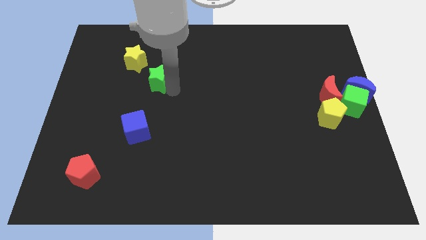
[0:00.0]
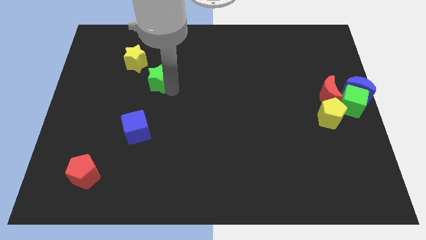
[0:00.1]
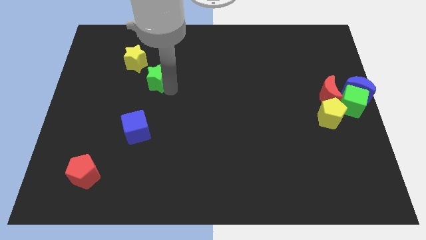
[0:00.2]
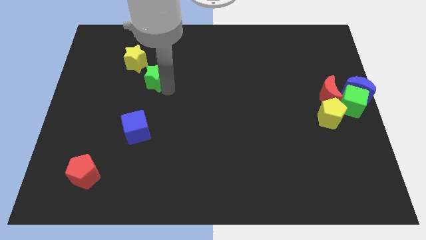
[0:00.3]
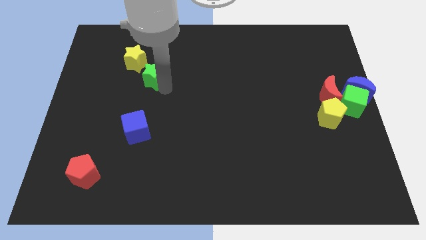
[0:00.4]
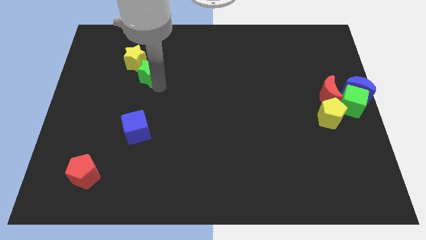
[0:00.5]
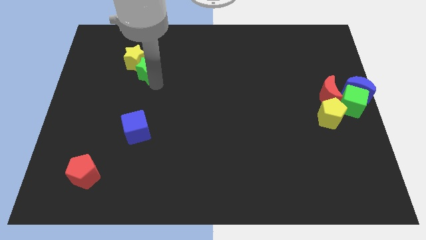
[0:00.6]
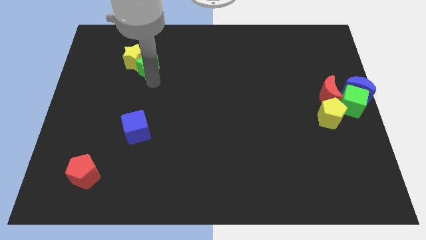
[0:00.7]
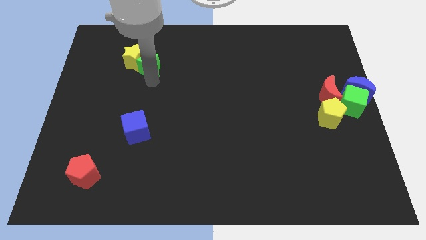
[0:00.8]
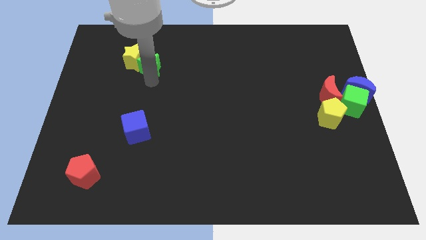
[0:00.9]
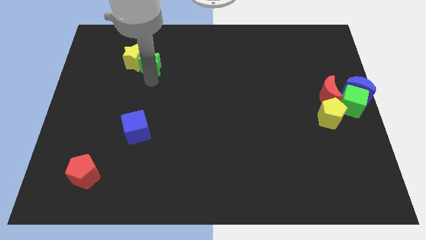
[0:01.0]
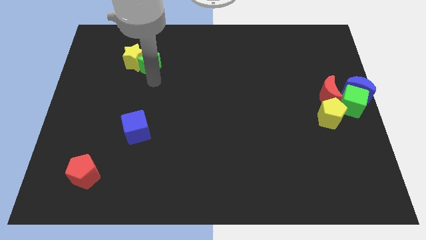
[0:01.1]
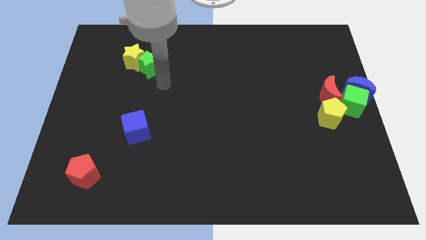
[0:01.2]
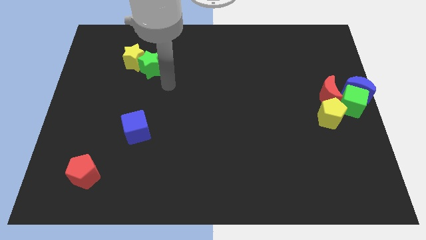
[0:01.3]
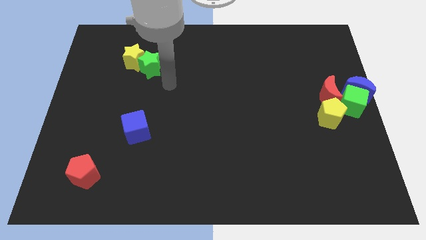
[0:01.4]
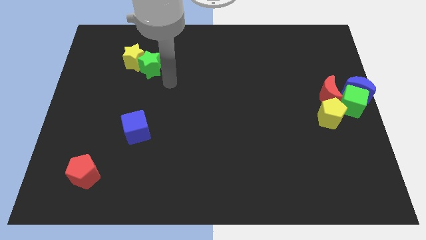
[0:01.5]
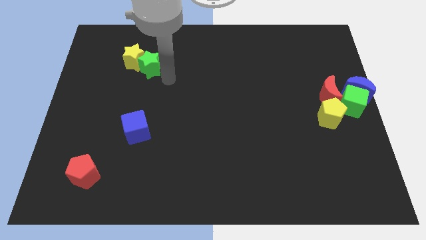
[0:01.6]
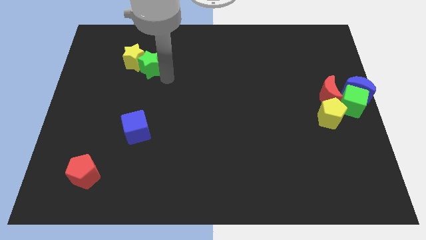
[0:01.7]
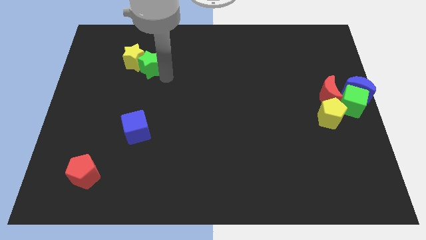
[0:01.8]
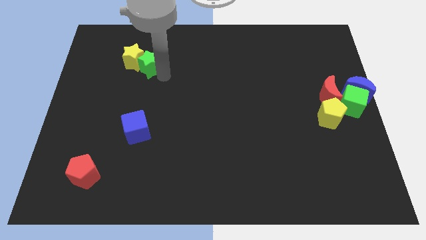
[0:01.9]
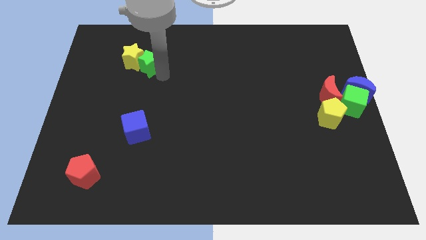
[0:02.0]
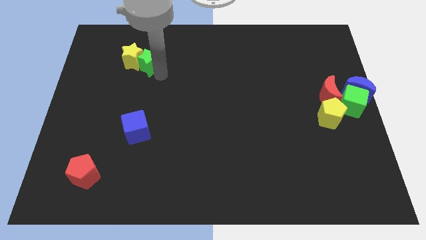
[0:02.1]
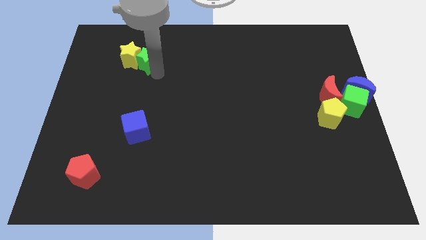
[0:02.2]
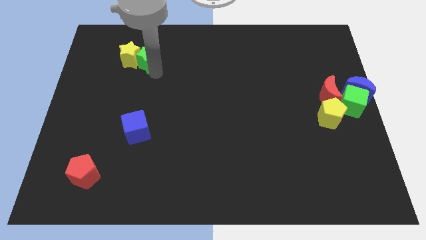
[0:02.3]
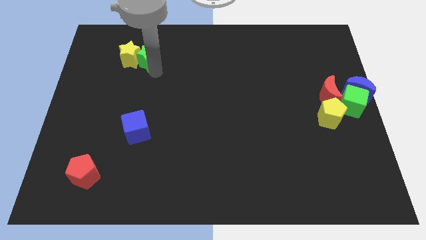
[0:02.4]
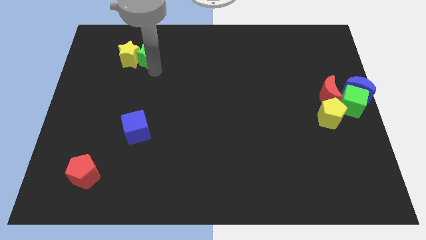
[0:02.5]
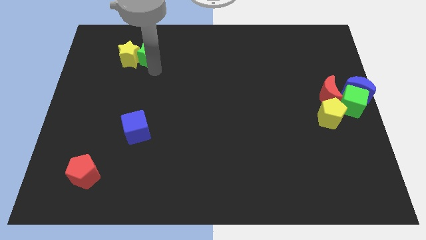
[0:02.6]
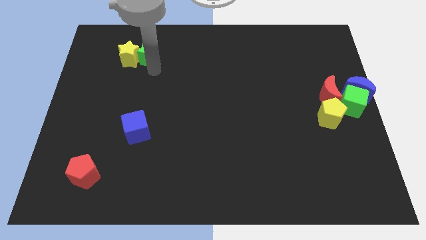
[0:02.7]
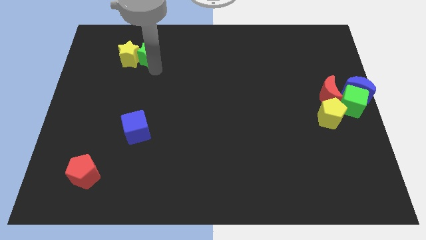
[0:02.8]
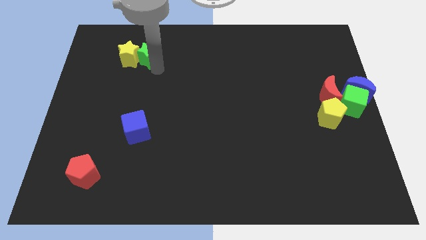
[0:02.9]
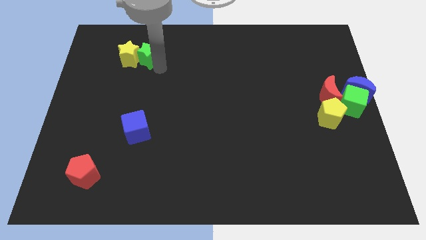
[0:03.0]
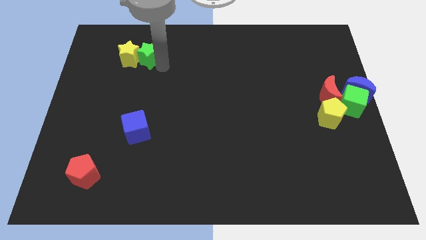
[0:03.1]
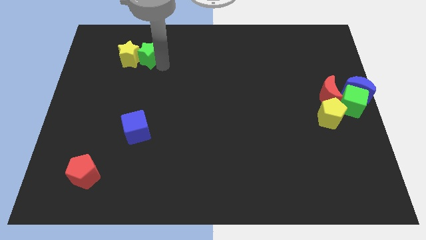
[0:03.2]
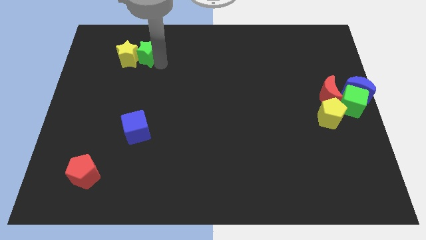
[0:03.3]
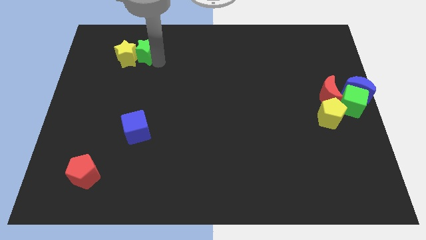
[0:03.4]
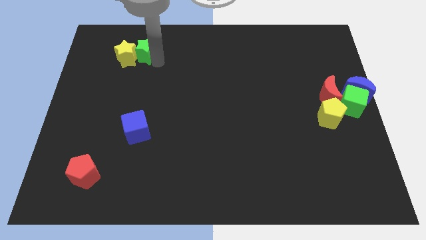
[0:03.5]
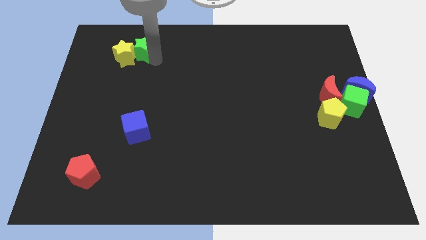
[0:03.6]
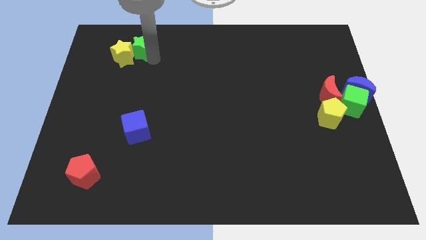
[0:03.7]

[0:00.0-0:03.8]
push the green star to the right of the yellow star

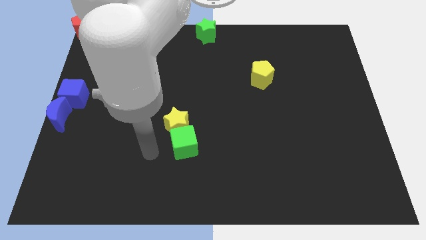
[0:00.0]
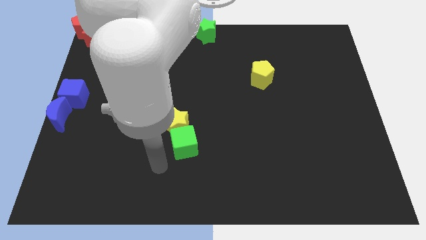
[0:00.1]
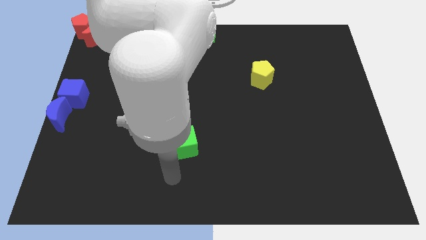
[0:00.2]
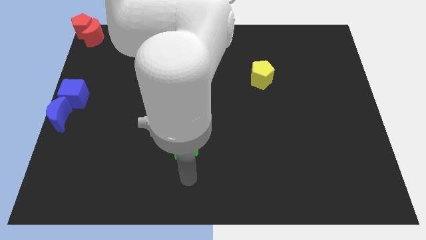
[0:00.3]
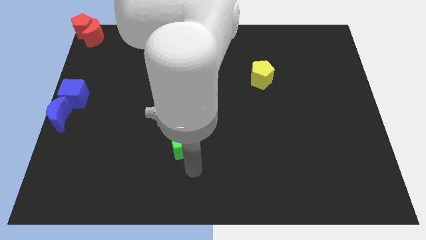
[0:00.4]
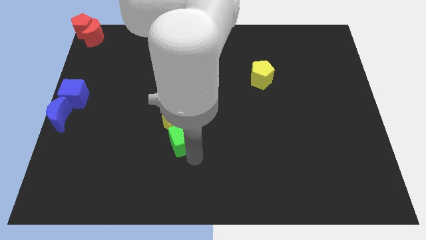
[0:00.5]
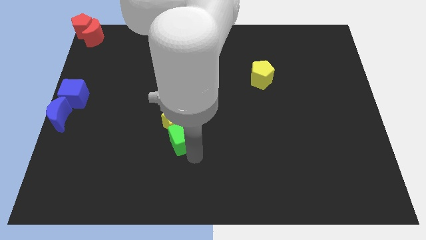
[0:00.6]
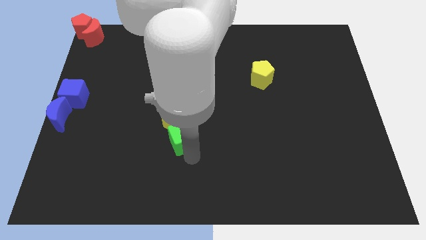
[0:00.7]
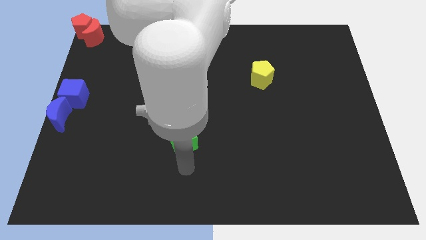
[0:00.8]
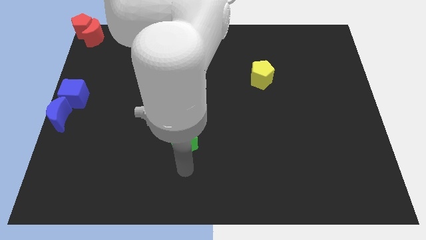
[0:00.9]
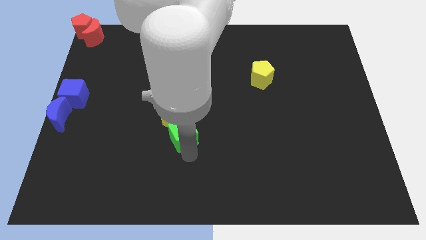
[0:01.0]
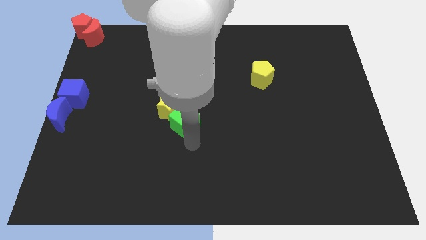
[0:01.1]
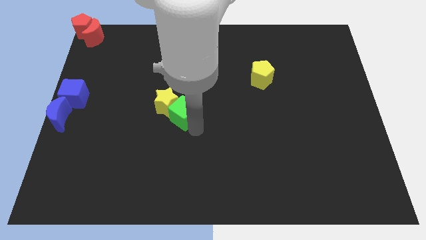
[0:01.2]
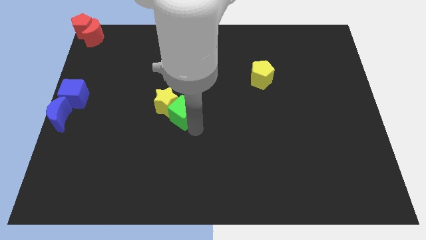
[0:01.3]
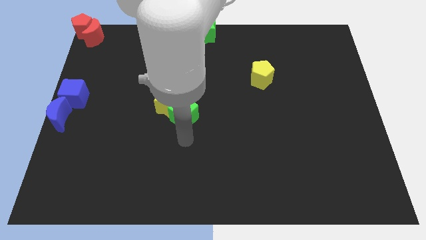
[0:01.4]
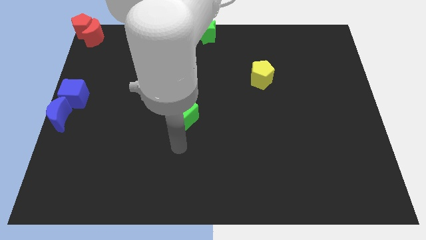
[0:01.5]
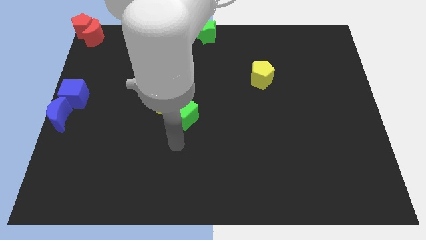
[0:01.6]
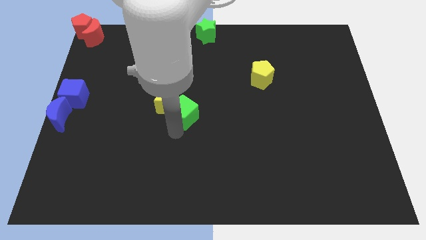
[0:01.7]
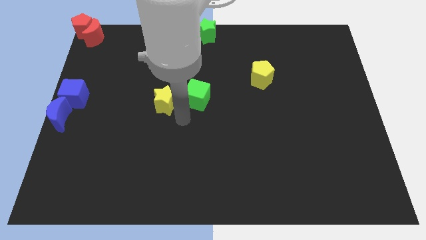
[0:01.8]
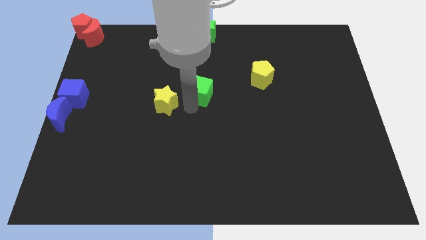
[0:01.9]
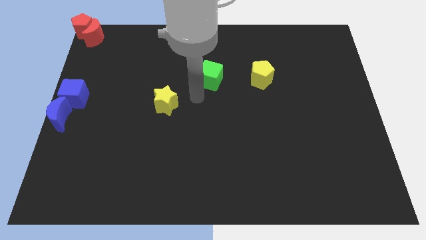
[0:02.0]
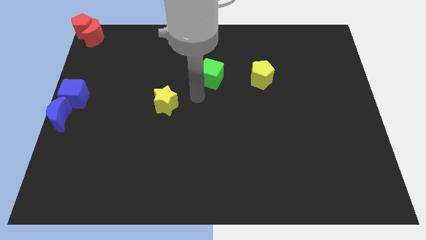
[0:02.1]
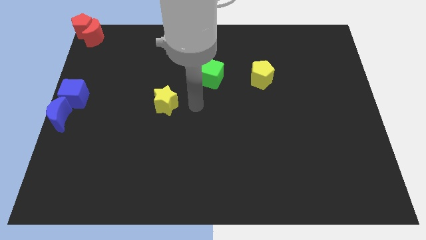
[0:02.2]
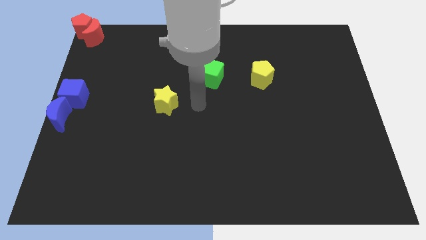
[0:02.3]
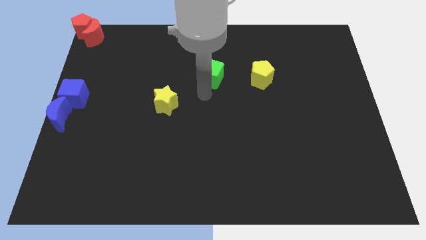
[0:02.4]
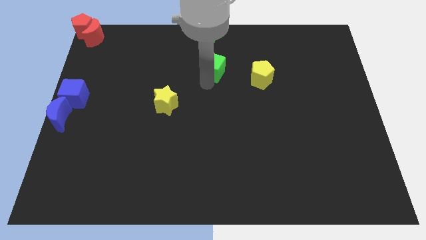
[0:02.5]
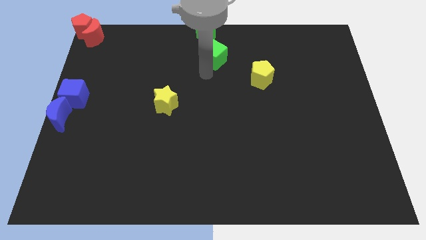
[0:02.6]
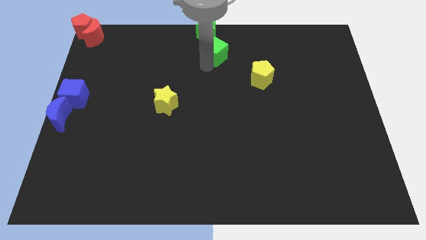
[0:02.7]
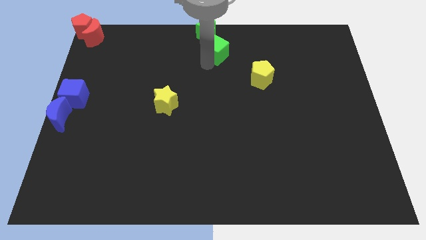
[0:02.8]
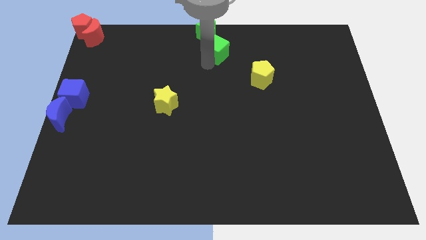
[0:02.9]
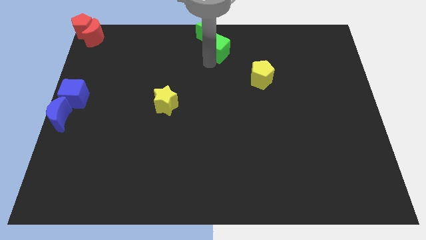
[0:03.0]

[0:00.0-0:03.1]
separate green cube from yellow star

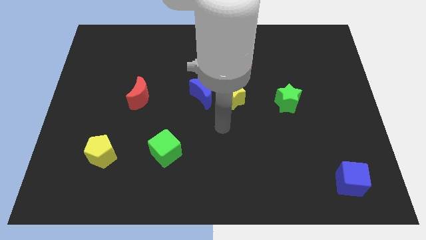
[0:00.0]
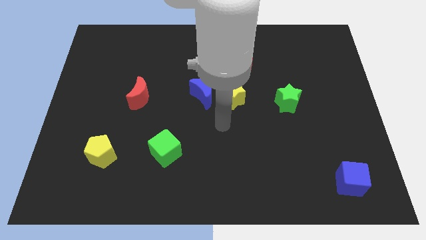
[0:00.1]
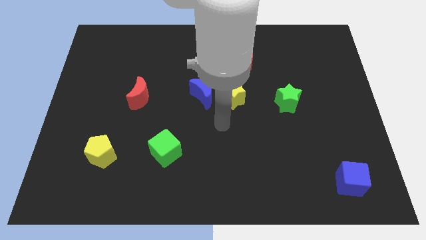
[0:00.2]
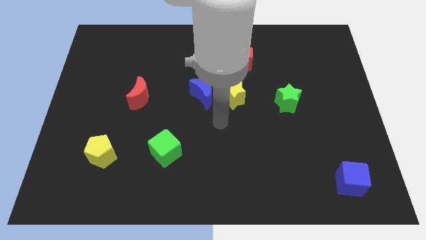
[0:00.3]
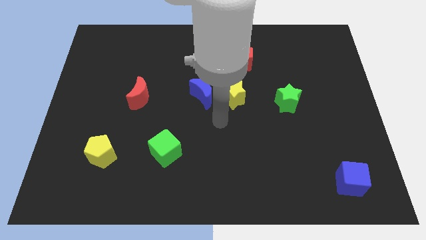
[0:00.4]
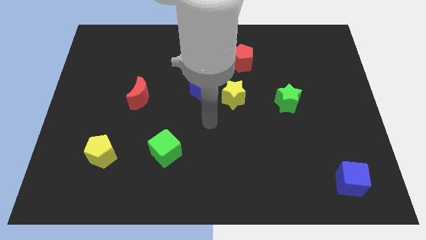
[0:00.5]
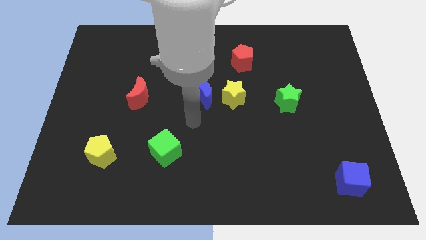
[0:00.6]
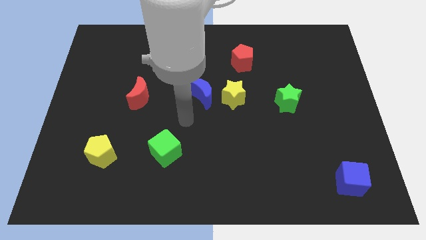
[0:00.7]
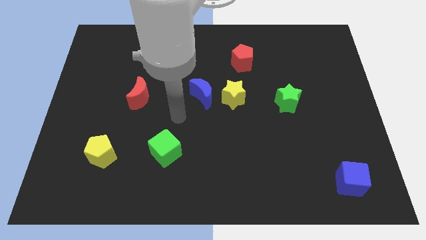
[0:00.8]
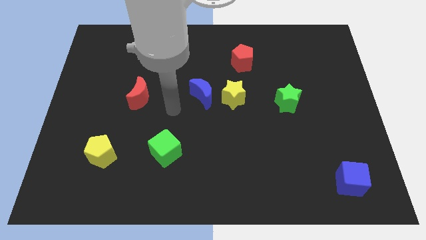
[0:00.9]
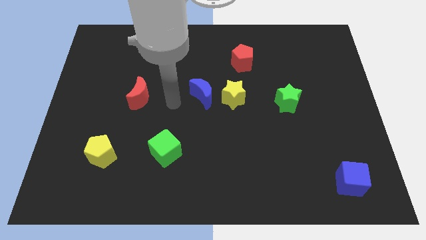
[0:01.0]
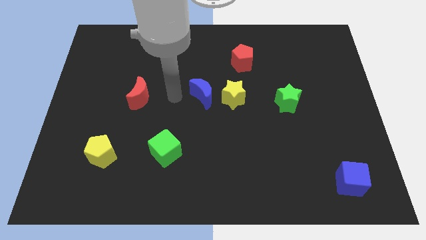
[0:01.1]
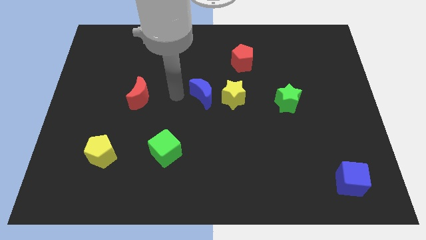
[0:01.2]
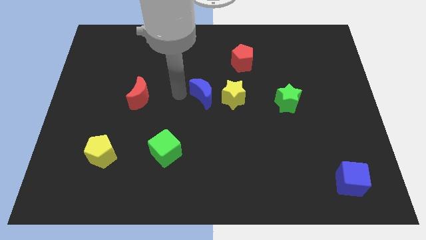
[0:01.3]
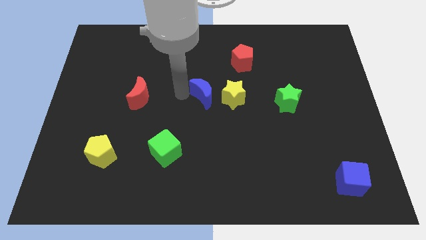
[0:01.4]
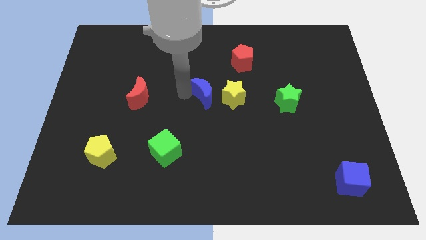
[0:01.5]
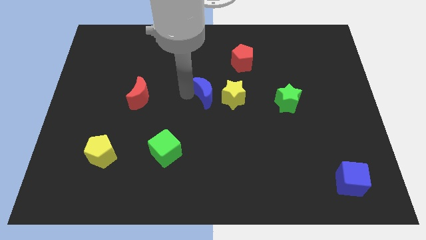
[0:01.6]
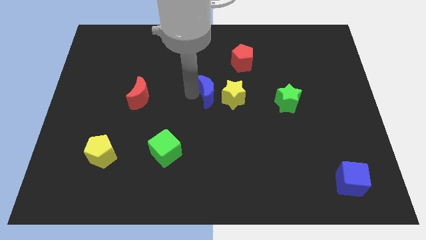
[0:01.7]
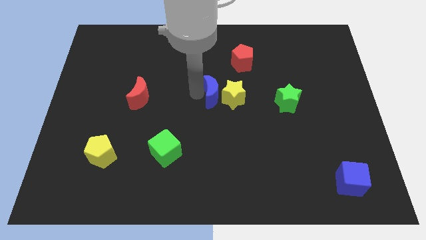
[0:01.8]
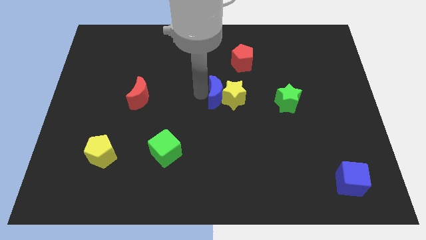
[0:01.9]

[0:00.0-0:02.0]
push the blue crescent into the yellow star
